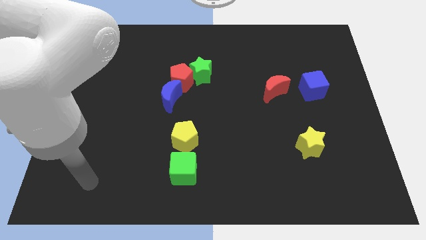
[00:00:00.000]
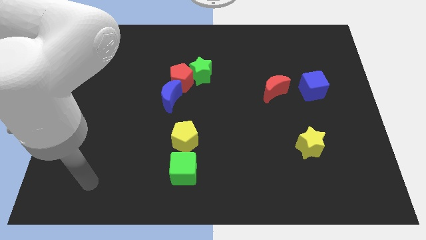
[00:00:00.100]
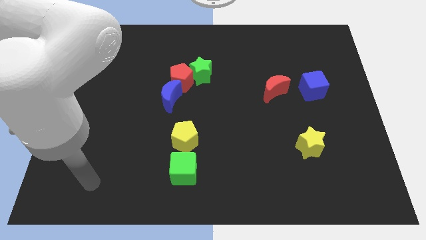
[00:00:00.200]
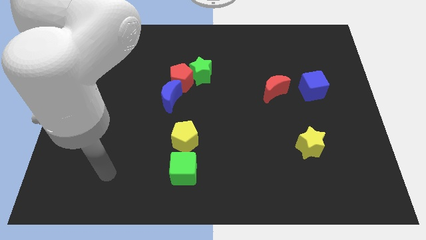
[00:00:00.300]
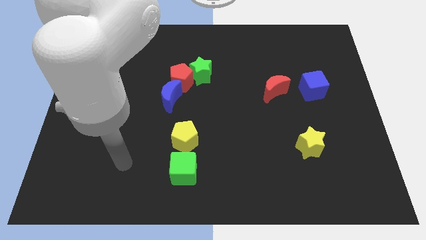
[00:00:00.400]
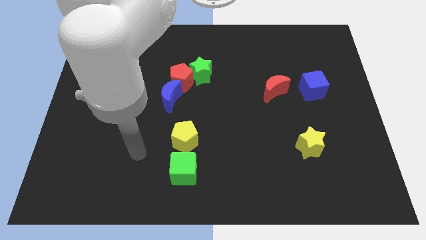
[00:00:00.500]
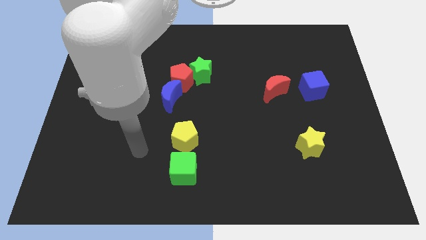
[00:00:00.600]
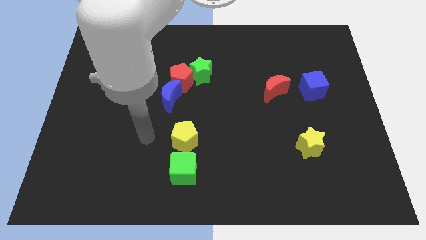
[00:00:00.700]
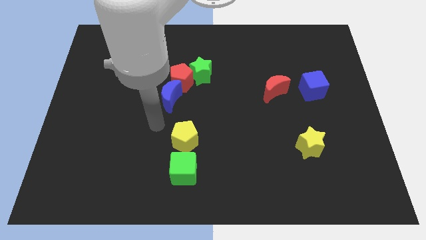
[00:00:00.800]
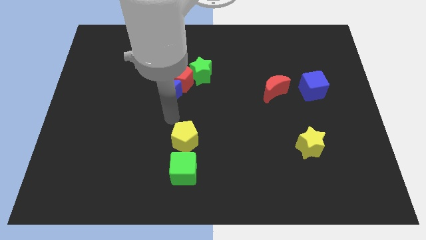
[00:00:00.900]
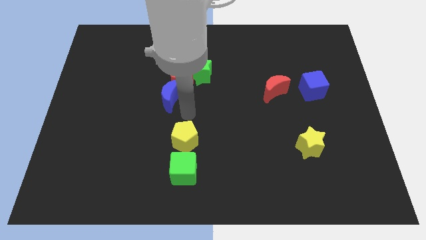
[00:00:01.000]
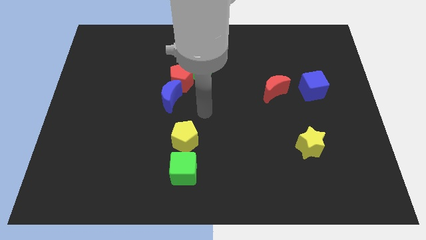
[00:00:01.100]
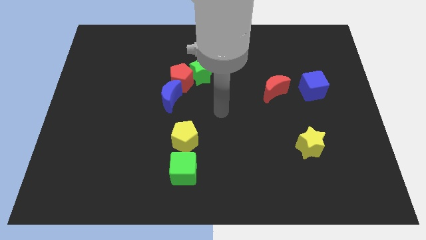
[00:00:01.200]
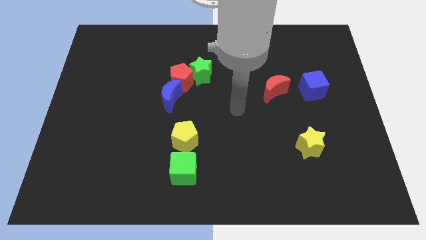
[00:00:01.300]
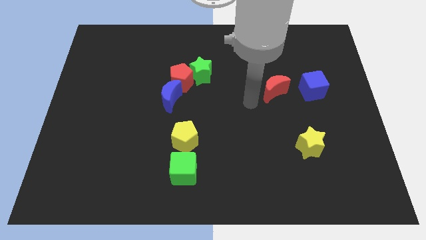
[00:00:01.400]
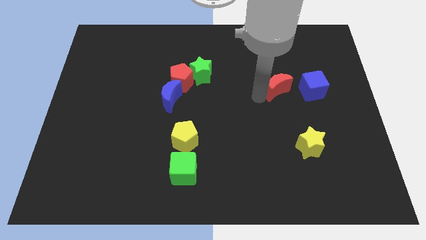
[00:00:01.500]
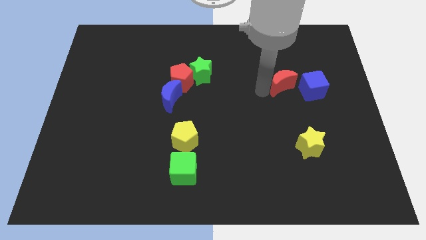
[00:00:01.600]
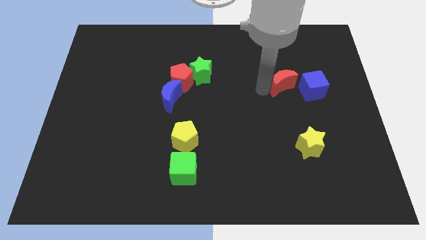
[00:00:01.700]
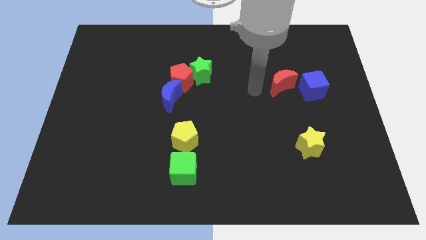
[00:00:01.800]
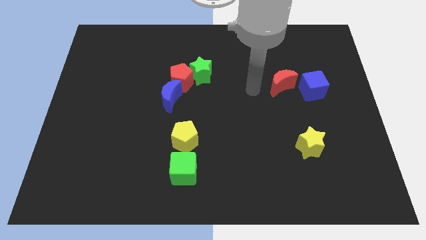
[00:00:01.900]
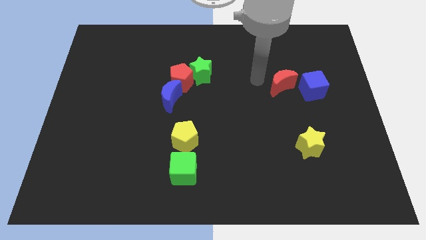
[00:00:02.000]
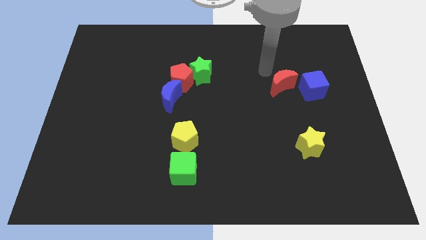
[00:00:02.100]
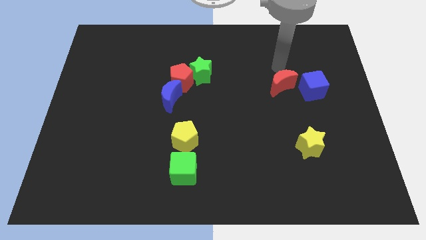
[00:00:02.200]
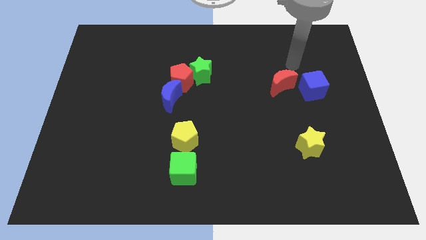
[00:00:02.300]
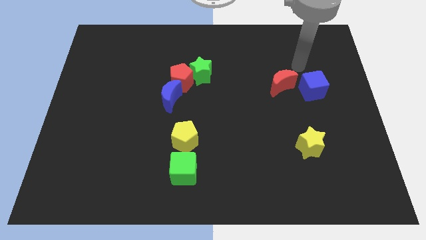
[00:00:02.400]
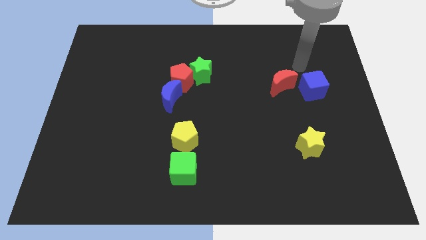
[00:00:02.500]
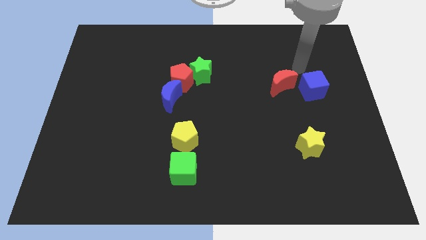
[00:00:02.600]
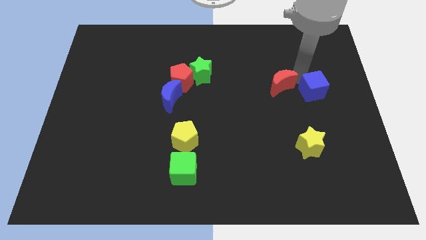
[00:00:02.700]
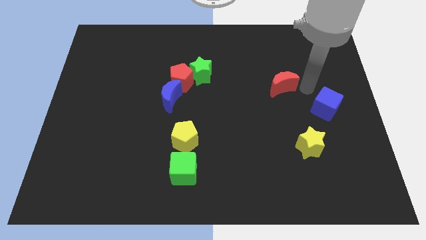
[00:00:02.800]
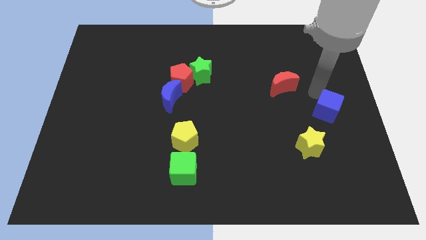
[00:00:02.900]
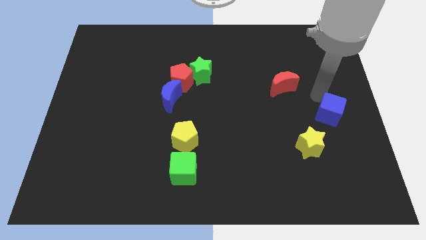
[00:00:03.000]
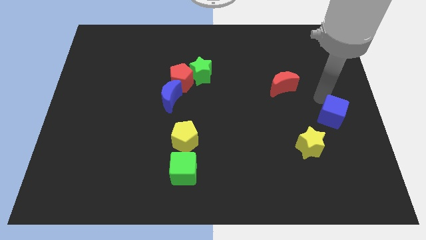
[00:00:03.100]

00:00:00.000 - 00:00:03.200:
move your arm towards the blue cube

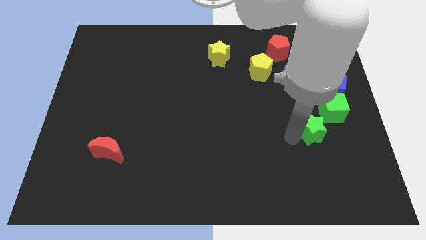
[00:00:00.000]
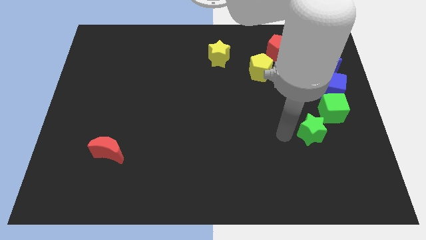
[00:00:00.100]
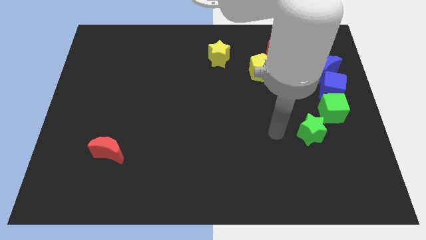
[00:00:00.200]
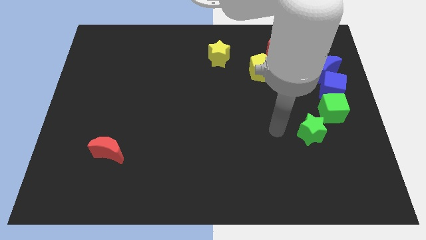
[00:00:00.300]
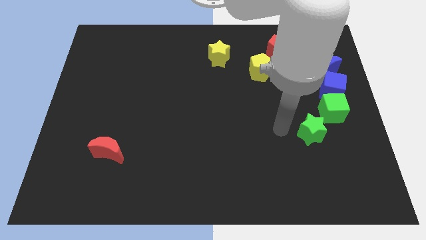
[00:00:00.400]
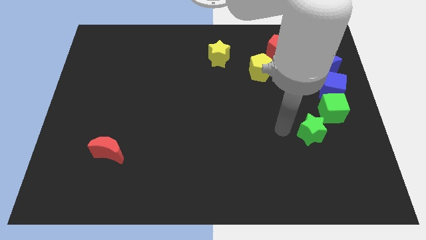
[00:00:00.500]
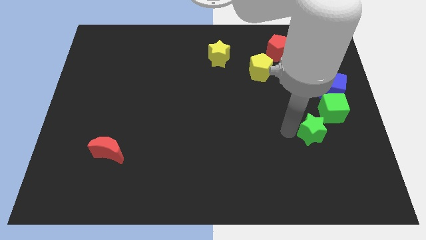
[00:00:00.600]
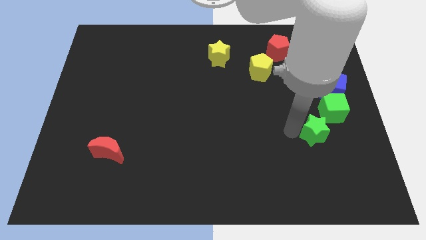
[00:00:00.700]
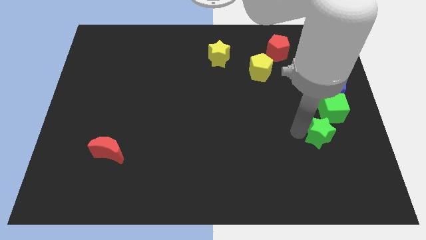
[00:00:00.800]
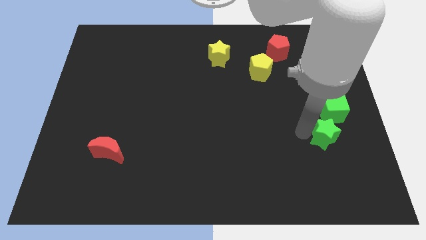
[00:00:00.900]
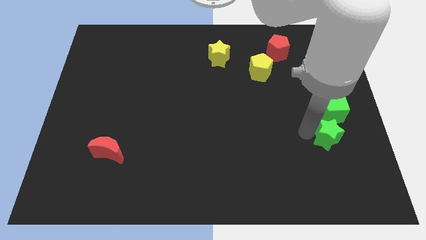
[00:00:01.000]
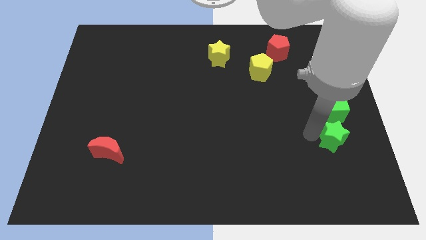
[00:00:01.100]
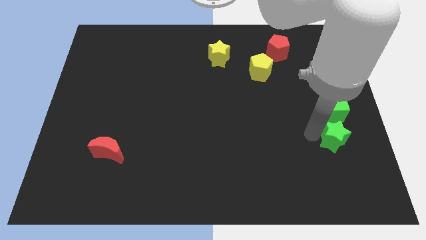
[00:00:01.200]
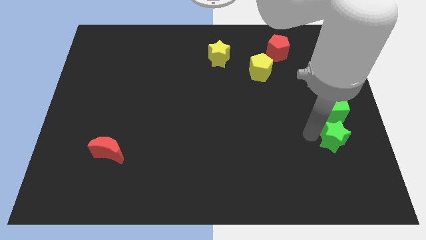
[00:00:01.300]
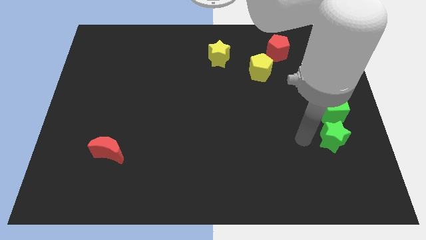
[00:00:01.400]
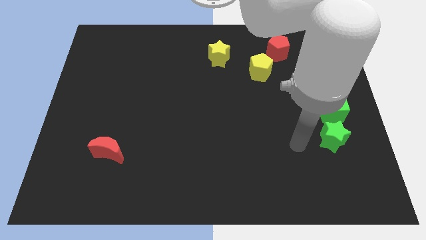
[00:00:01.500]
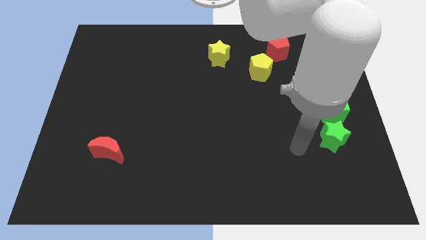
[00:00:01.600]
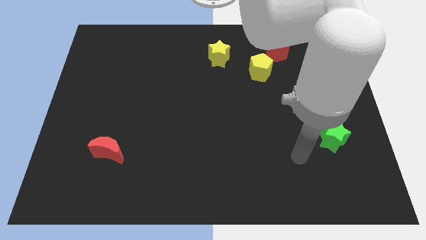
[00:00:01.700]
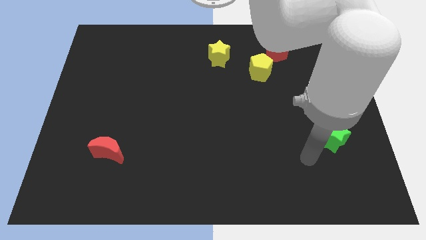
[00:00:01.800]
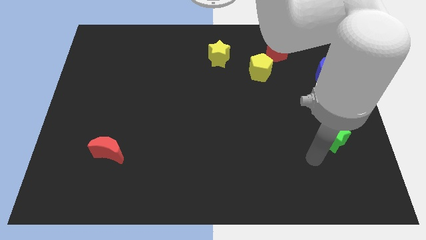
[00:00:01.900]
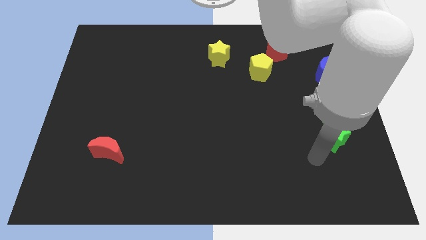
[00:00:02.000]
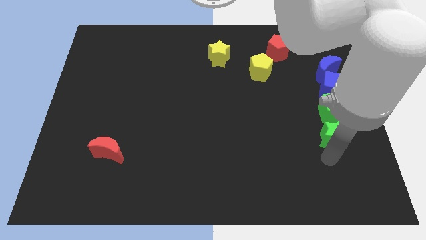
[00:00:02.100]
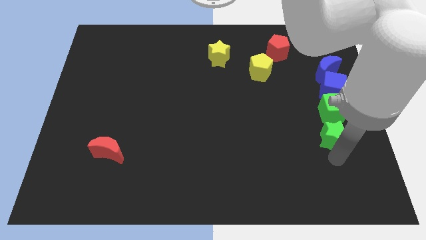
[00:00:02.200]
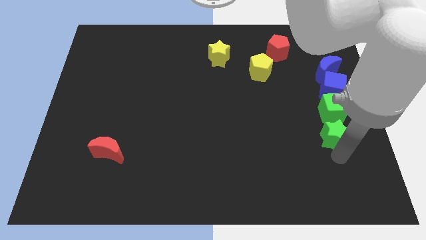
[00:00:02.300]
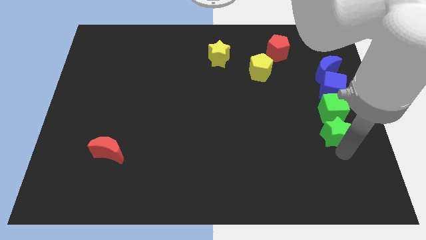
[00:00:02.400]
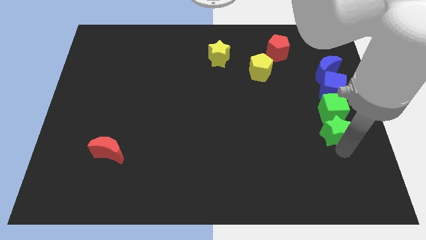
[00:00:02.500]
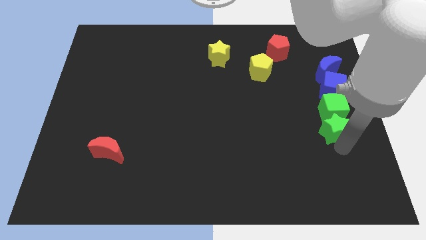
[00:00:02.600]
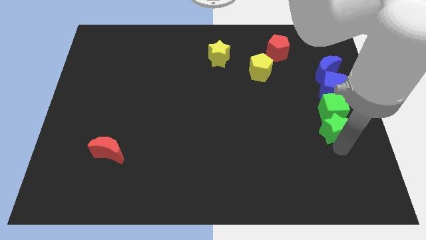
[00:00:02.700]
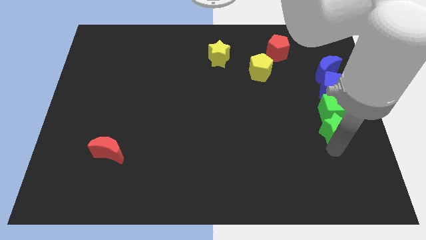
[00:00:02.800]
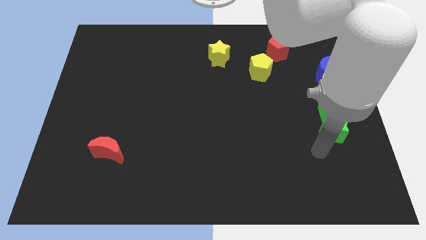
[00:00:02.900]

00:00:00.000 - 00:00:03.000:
push the green star to the bottom side of the green cube

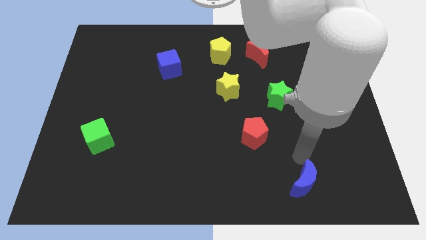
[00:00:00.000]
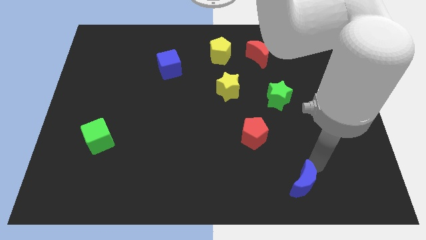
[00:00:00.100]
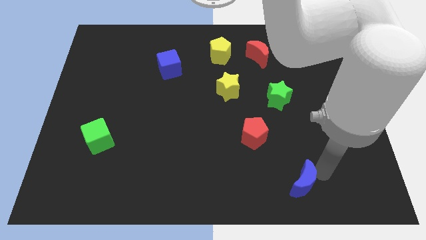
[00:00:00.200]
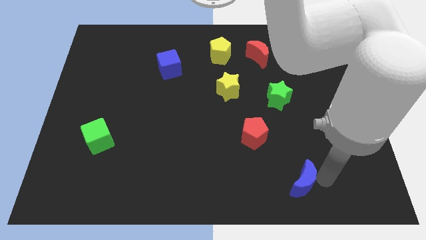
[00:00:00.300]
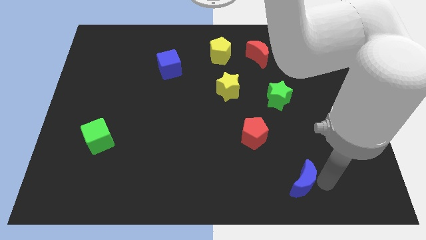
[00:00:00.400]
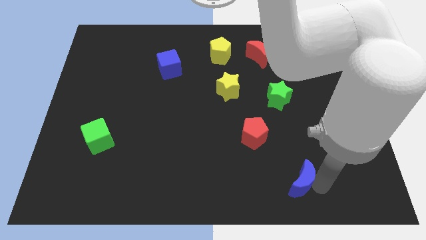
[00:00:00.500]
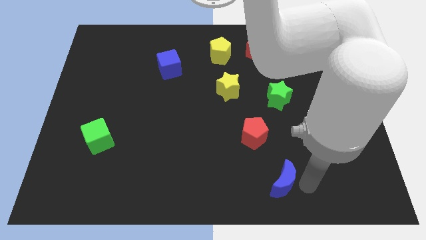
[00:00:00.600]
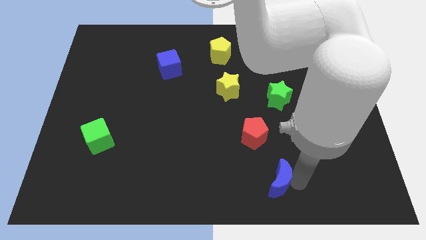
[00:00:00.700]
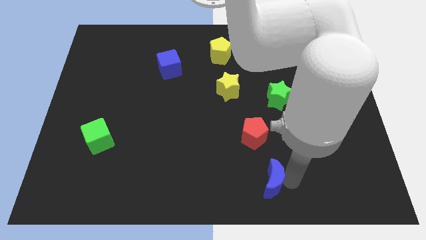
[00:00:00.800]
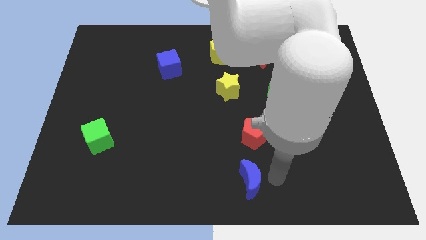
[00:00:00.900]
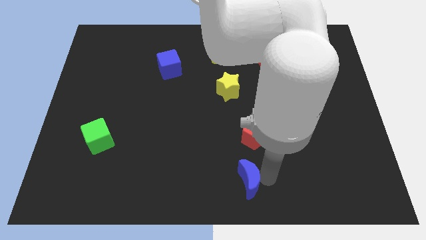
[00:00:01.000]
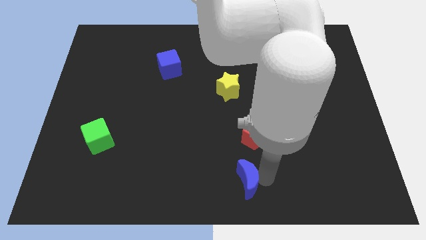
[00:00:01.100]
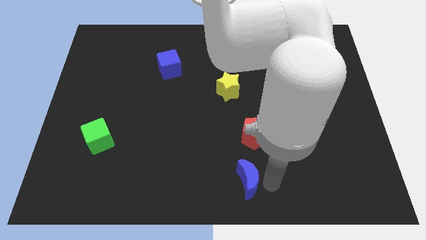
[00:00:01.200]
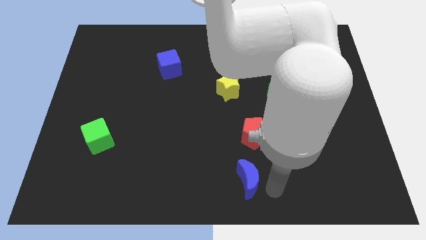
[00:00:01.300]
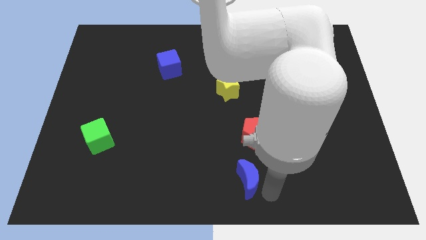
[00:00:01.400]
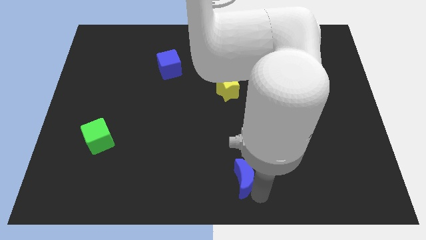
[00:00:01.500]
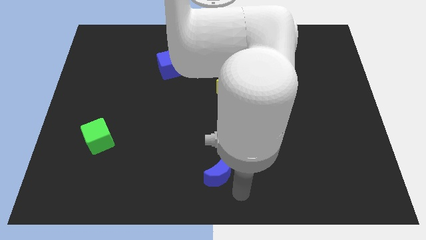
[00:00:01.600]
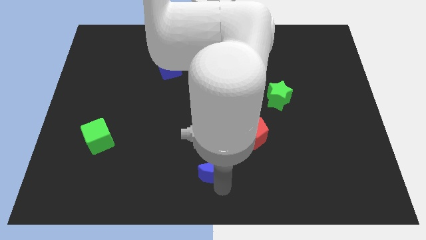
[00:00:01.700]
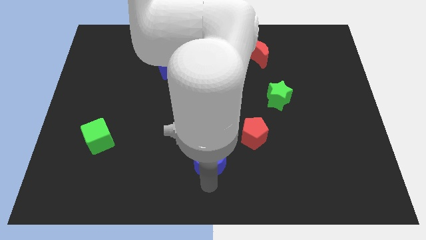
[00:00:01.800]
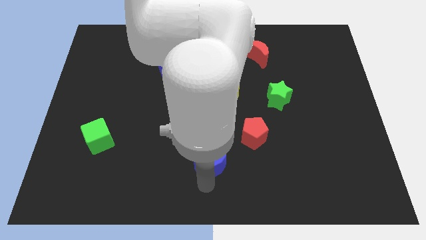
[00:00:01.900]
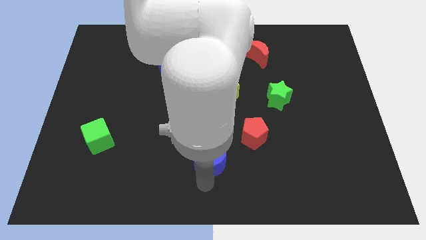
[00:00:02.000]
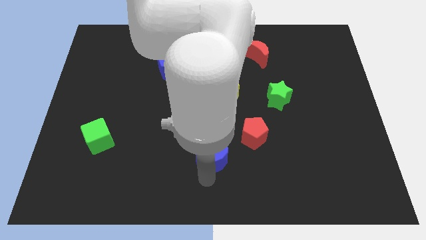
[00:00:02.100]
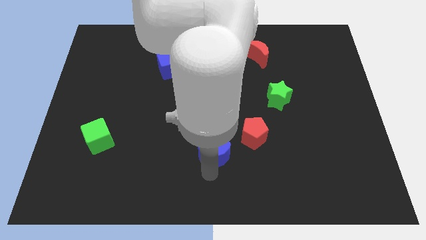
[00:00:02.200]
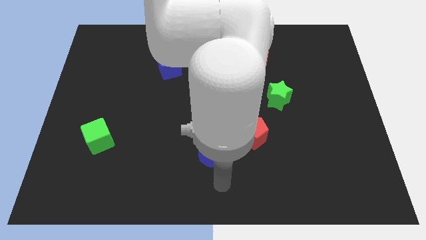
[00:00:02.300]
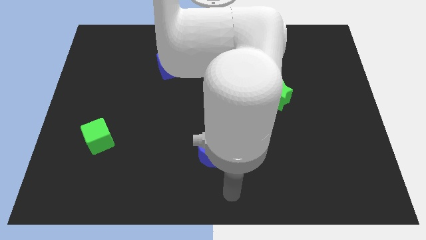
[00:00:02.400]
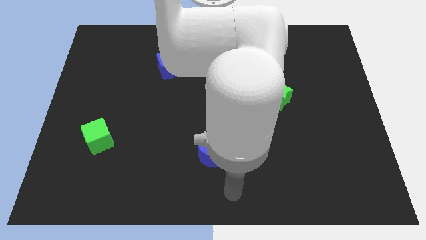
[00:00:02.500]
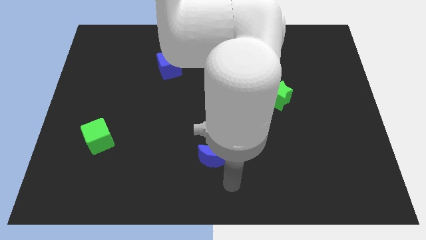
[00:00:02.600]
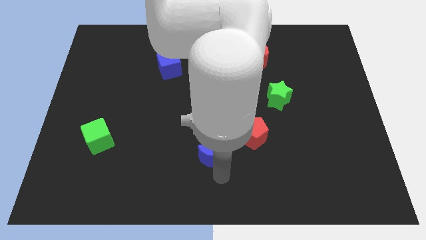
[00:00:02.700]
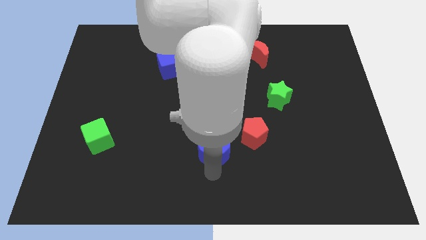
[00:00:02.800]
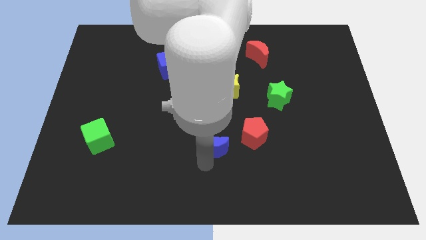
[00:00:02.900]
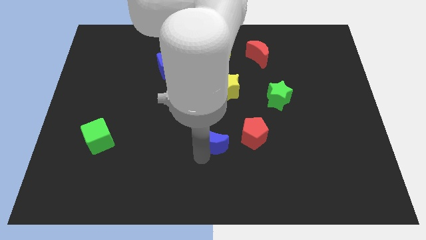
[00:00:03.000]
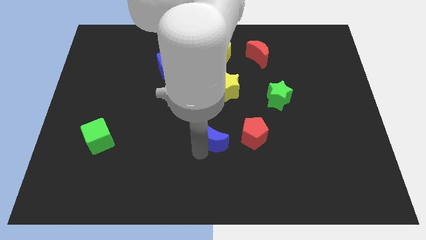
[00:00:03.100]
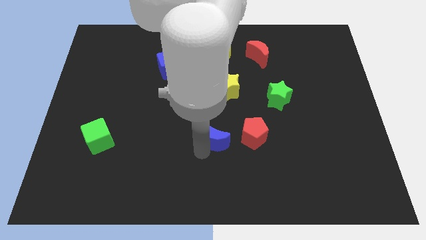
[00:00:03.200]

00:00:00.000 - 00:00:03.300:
move the blue crescent left to the red pentagon
